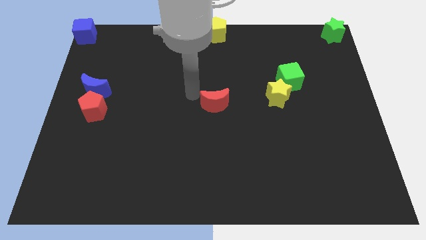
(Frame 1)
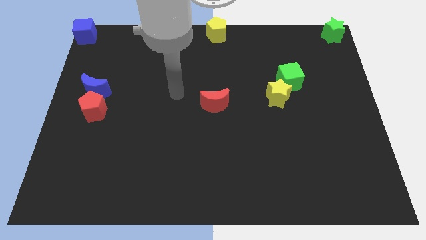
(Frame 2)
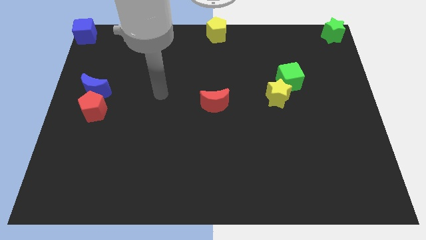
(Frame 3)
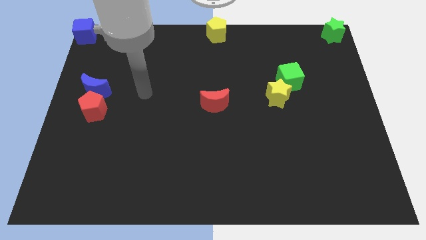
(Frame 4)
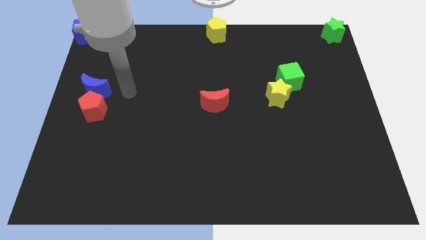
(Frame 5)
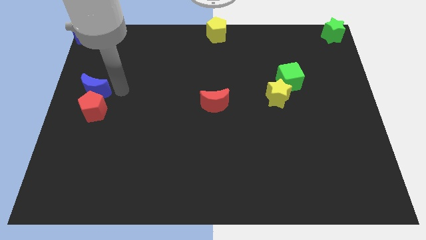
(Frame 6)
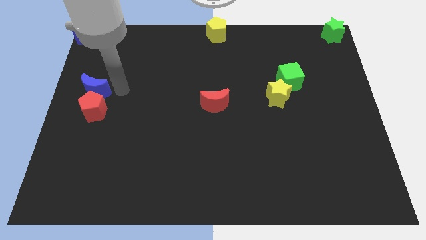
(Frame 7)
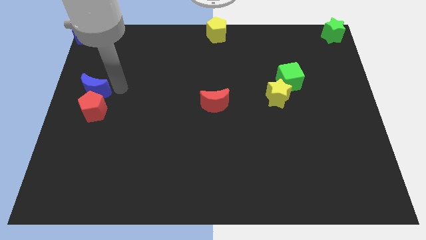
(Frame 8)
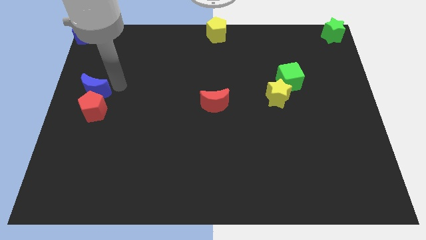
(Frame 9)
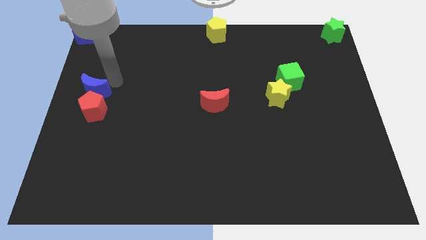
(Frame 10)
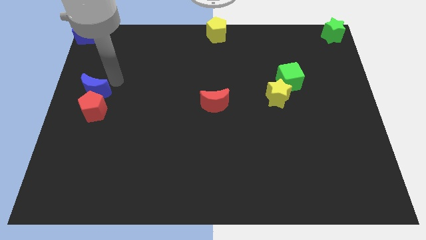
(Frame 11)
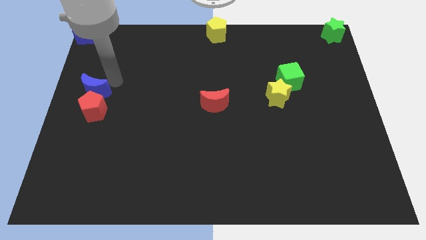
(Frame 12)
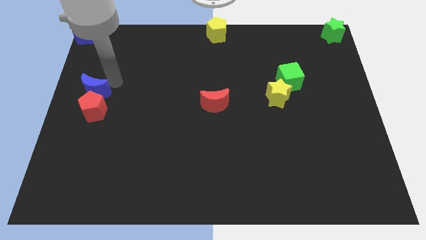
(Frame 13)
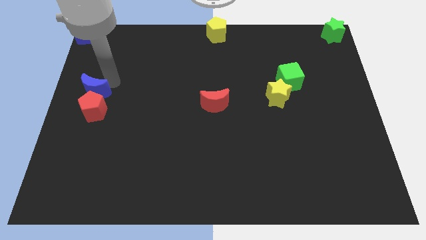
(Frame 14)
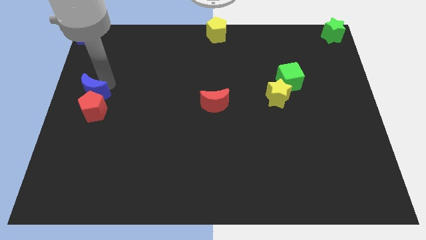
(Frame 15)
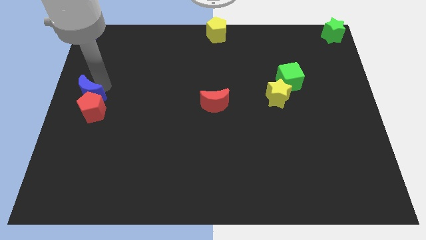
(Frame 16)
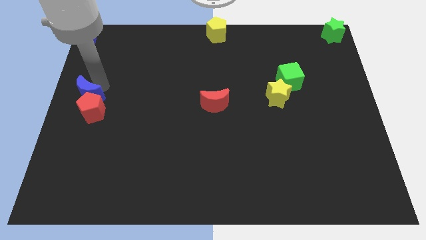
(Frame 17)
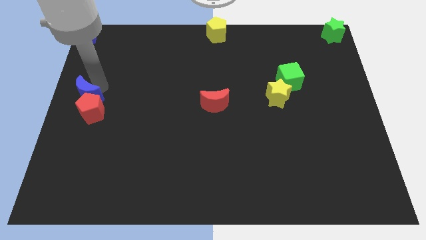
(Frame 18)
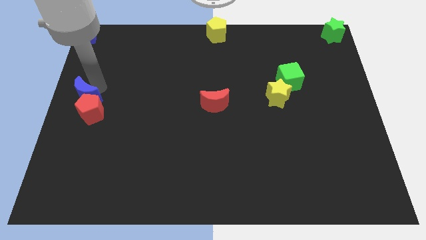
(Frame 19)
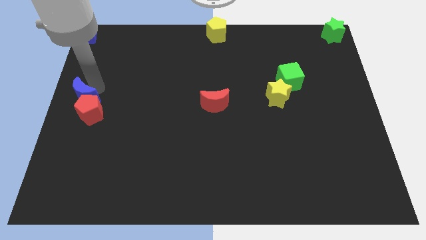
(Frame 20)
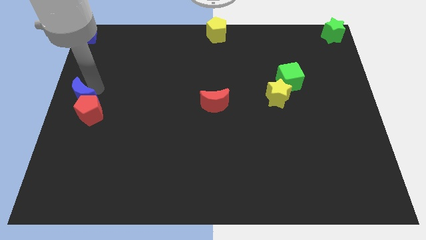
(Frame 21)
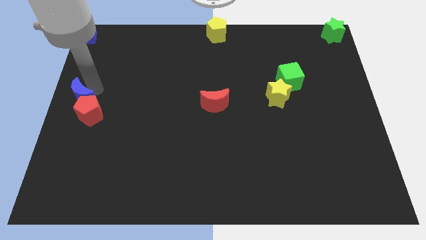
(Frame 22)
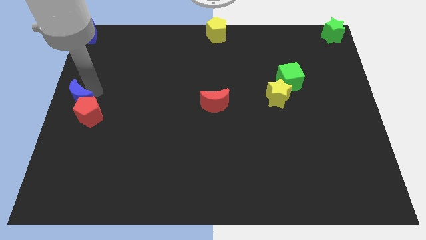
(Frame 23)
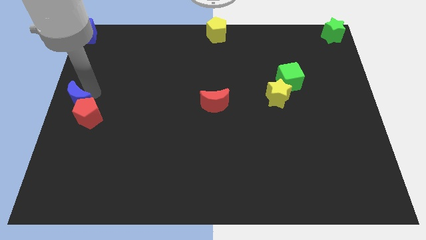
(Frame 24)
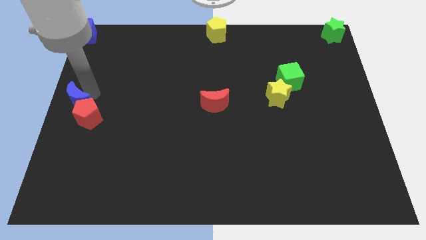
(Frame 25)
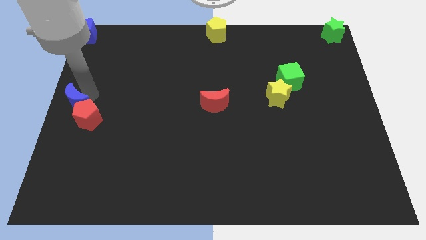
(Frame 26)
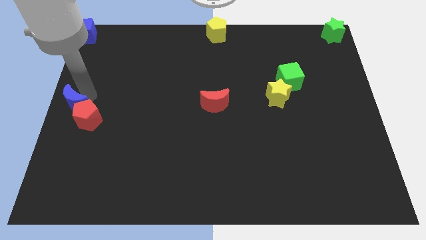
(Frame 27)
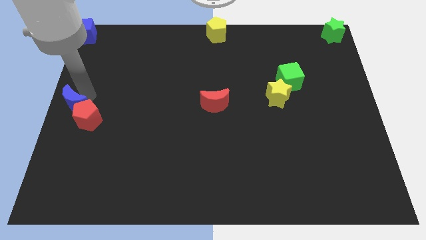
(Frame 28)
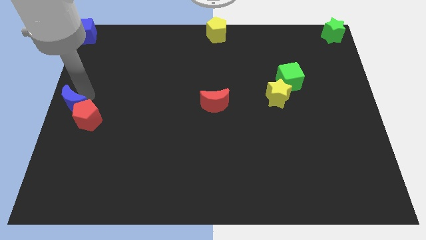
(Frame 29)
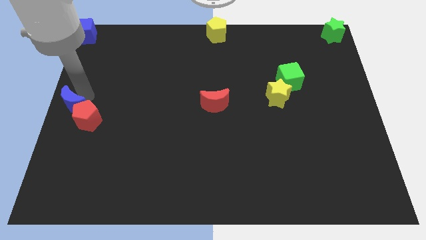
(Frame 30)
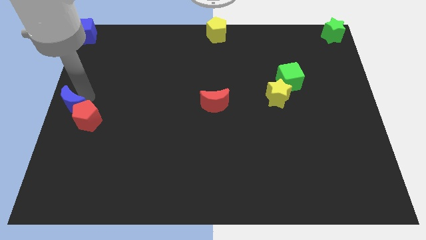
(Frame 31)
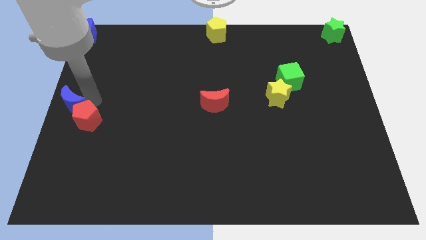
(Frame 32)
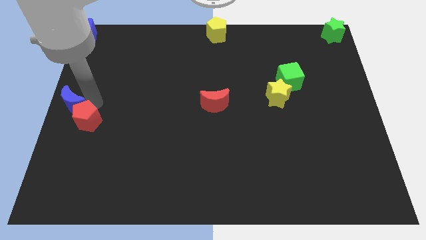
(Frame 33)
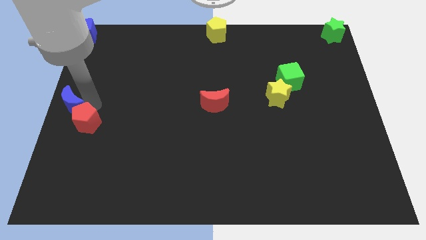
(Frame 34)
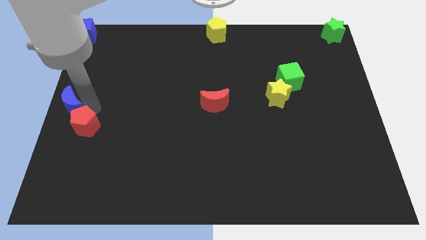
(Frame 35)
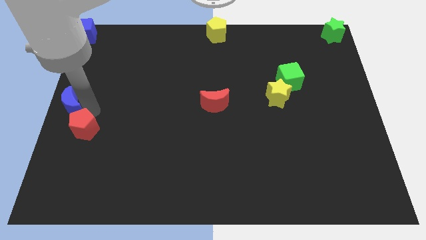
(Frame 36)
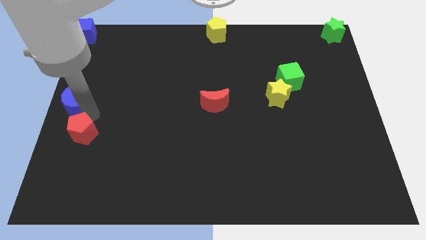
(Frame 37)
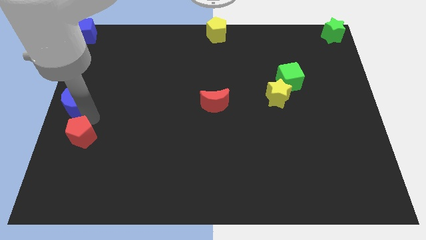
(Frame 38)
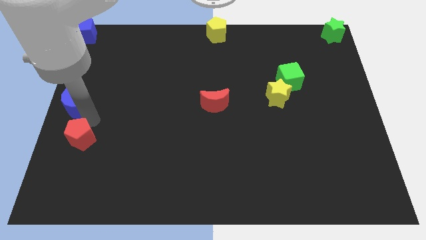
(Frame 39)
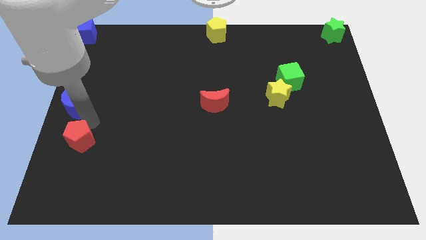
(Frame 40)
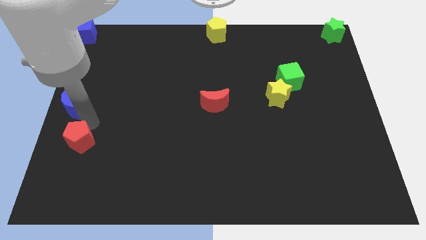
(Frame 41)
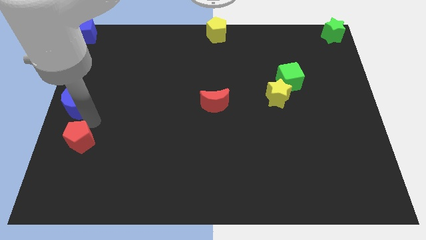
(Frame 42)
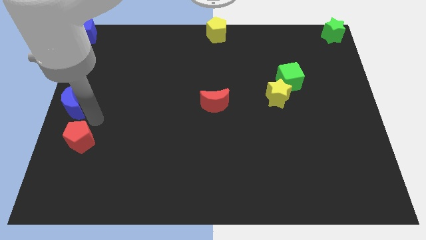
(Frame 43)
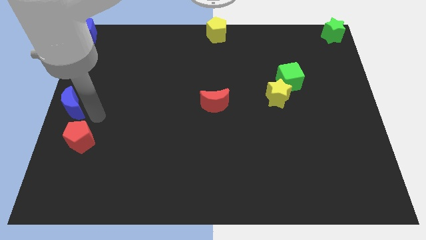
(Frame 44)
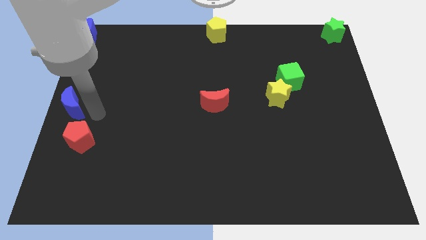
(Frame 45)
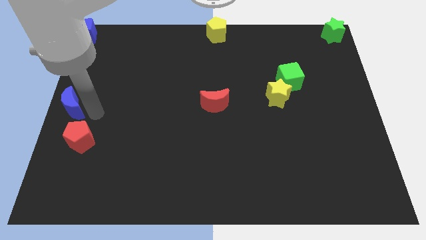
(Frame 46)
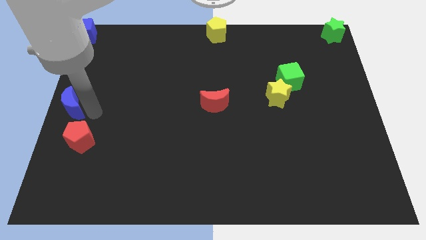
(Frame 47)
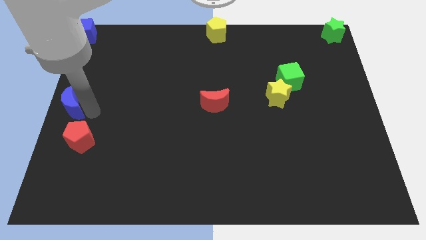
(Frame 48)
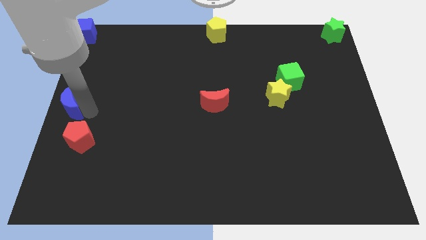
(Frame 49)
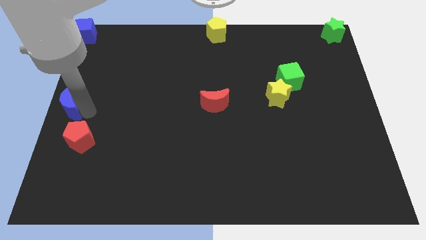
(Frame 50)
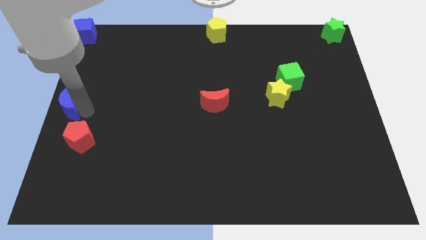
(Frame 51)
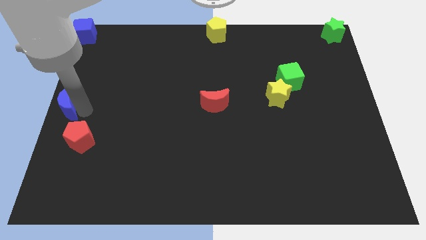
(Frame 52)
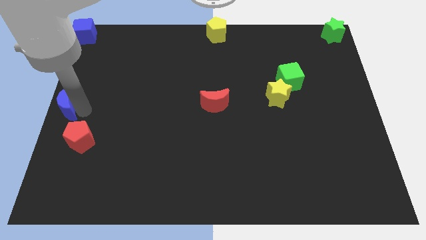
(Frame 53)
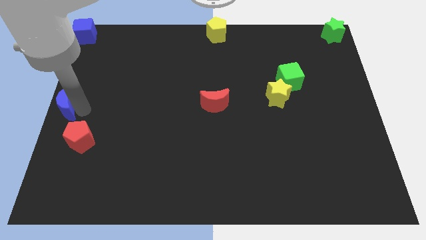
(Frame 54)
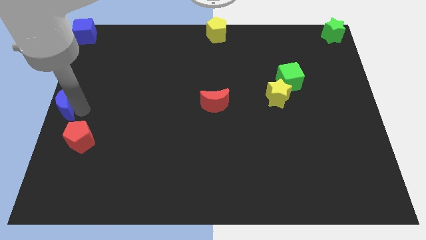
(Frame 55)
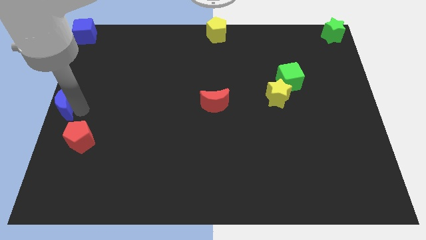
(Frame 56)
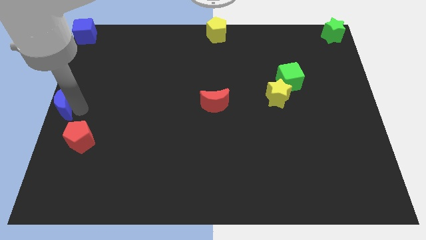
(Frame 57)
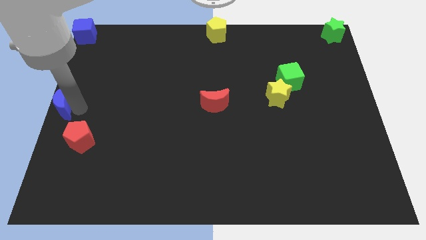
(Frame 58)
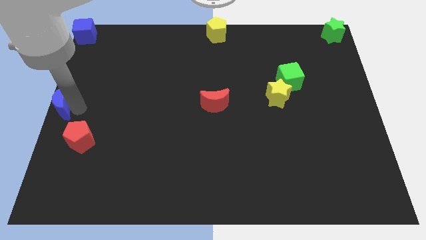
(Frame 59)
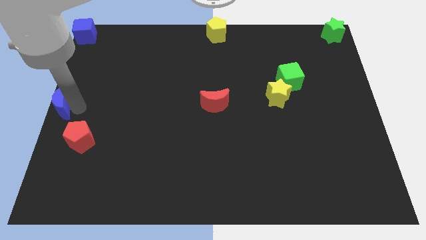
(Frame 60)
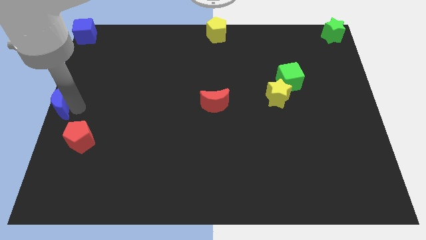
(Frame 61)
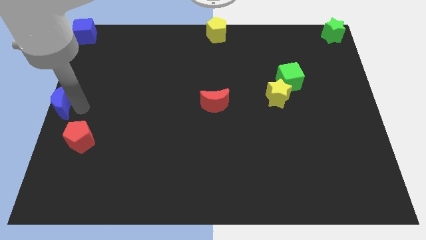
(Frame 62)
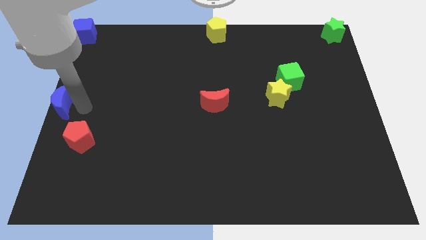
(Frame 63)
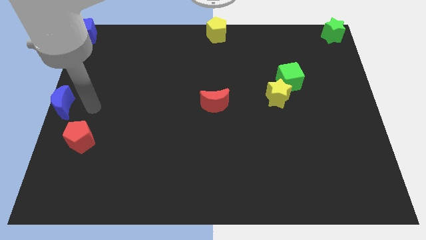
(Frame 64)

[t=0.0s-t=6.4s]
separate red pentagon and the blue moon

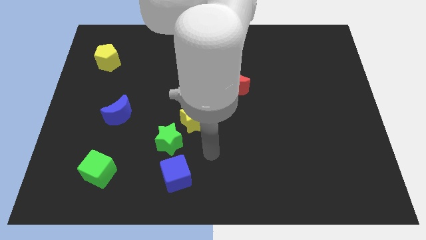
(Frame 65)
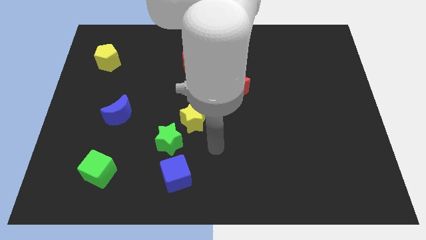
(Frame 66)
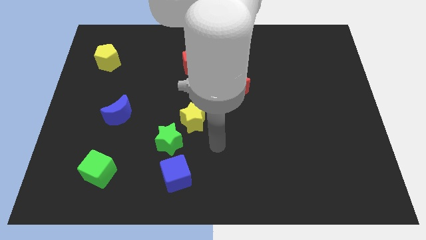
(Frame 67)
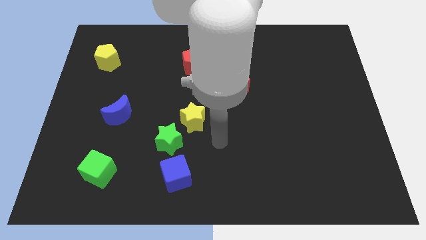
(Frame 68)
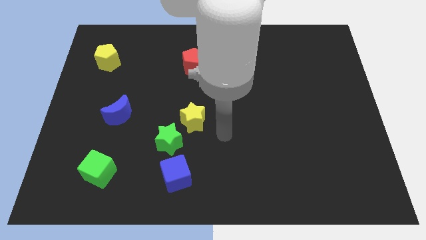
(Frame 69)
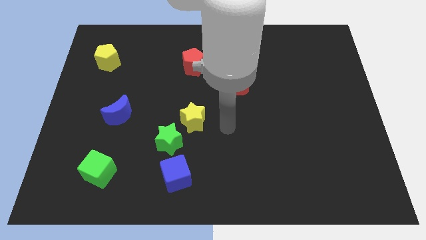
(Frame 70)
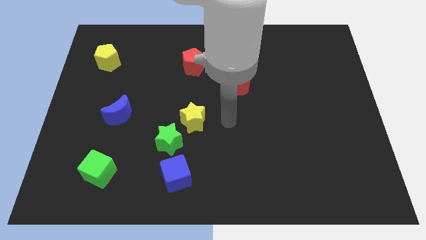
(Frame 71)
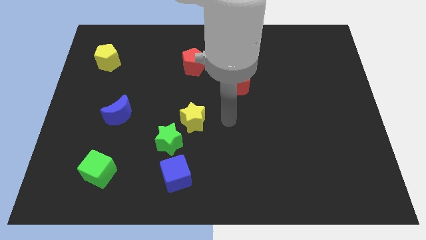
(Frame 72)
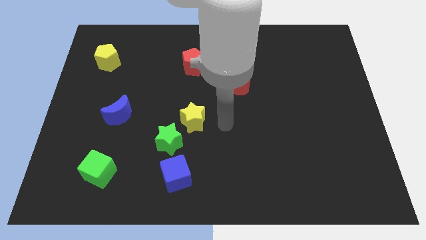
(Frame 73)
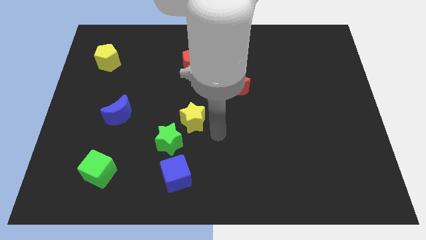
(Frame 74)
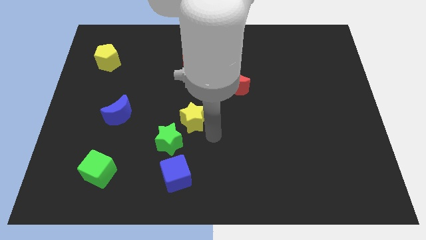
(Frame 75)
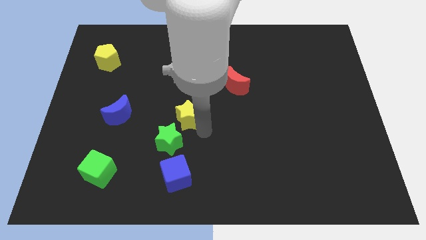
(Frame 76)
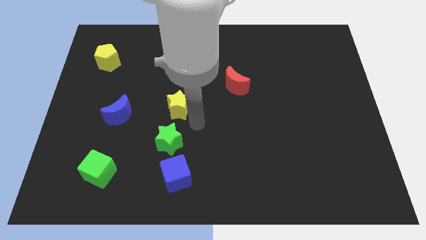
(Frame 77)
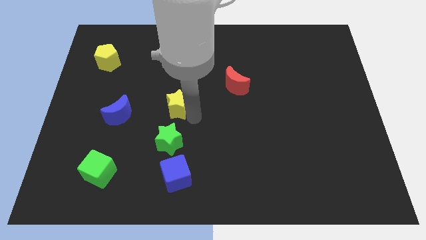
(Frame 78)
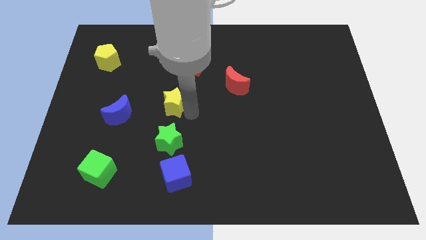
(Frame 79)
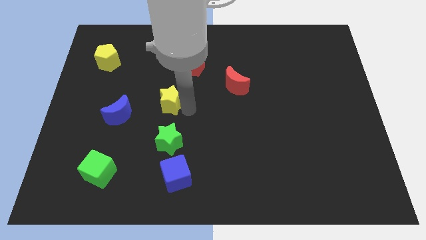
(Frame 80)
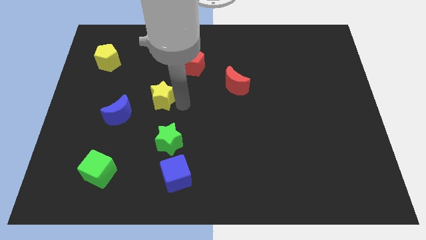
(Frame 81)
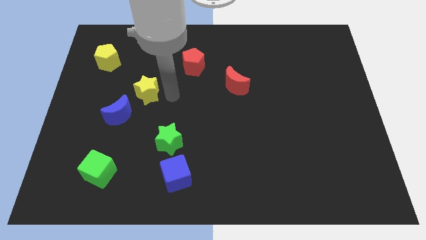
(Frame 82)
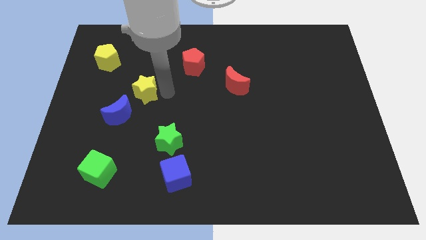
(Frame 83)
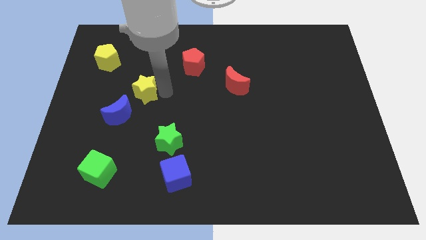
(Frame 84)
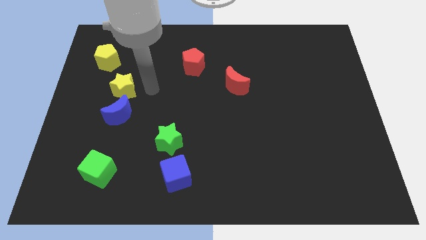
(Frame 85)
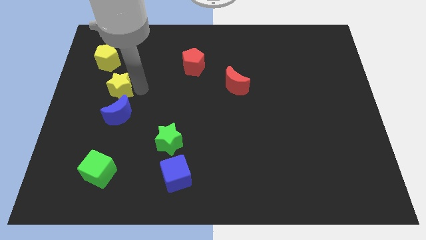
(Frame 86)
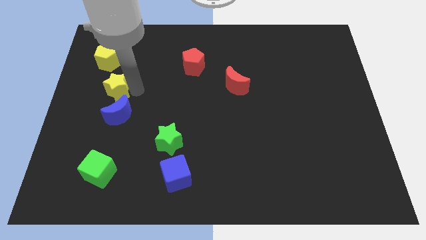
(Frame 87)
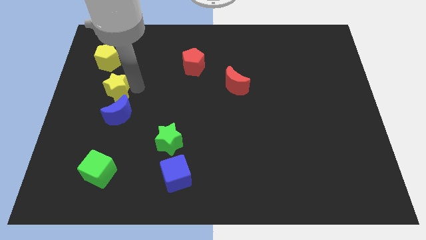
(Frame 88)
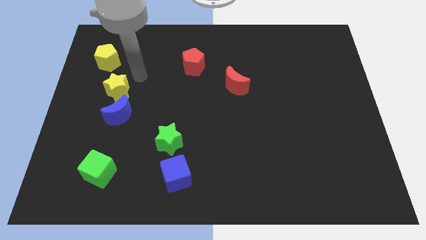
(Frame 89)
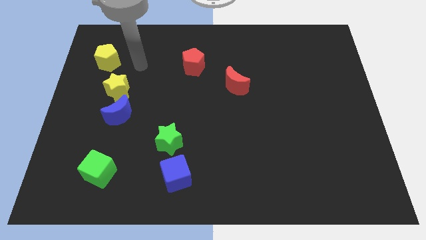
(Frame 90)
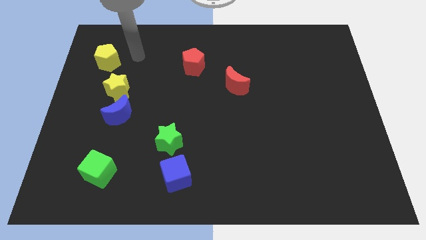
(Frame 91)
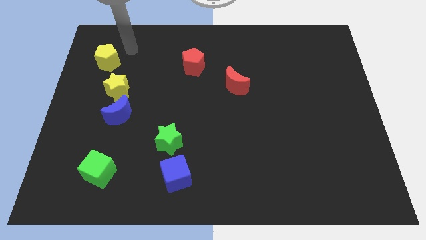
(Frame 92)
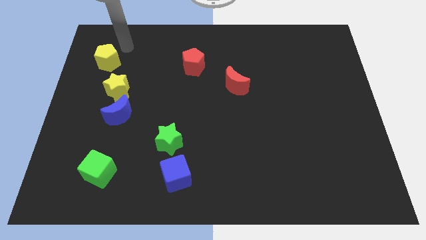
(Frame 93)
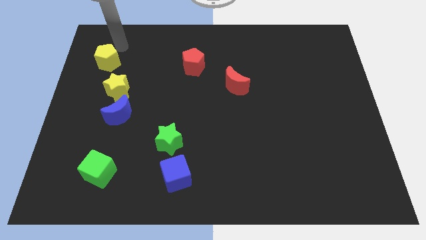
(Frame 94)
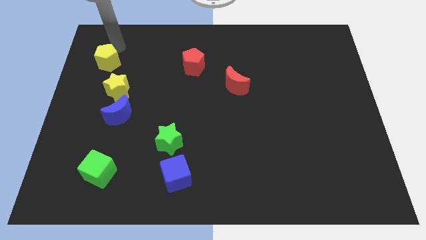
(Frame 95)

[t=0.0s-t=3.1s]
push the yellow star on top of the blue crescent
